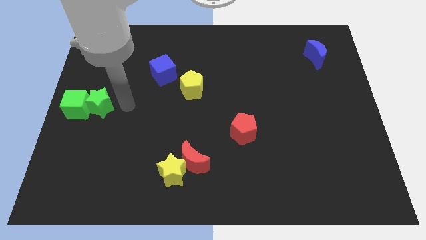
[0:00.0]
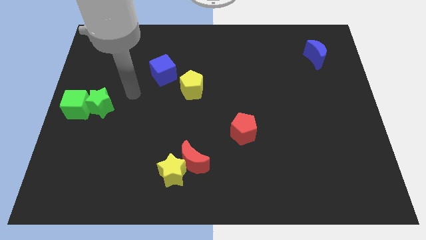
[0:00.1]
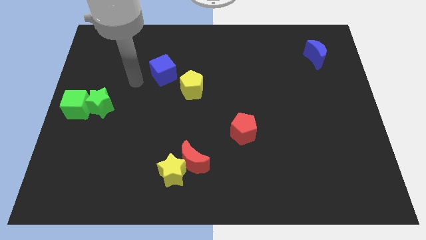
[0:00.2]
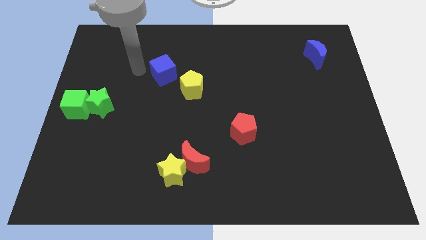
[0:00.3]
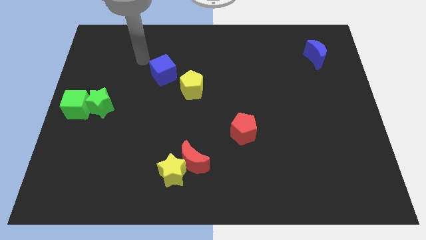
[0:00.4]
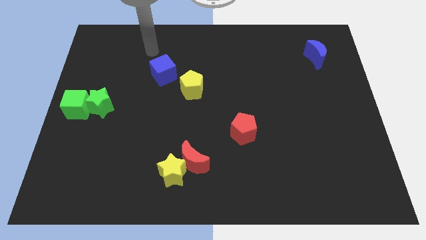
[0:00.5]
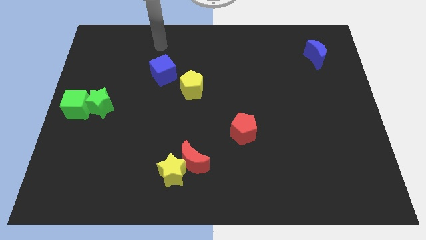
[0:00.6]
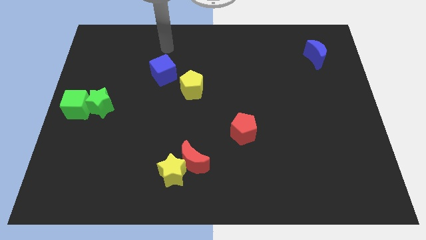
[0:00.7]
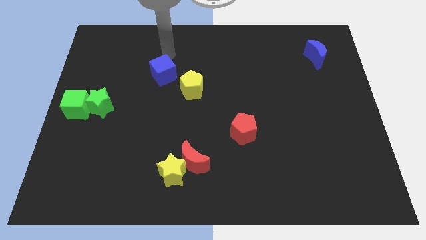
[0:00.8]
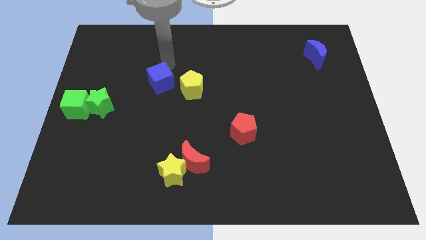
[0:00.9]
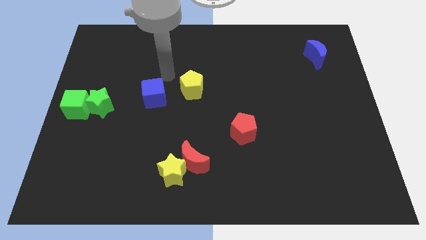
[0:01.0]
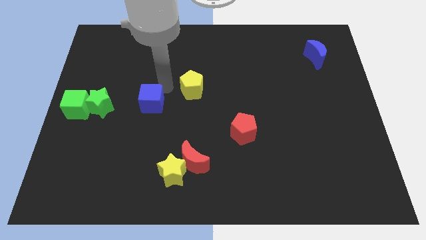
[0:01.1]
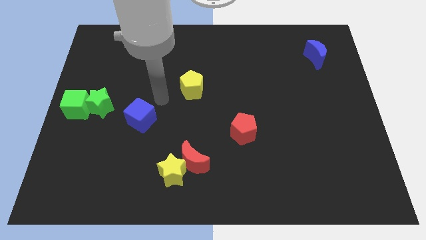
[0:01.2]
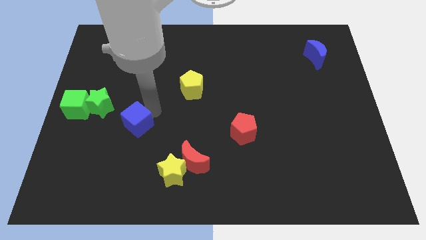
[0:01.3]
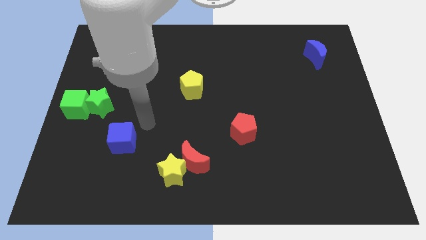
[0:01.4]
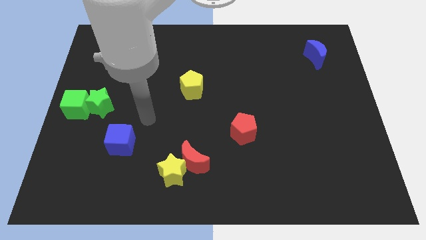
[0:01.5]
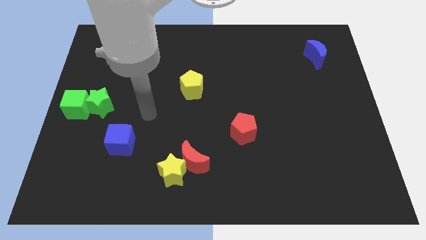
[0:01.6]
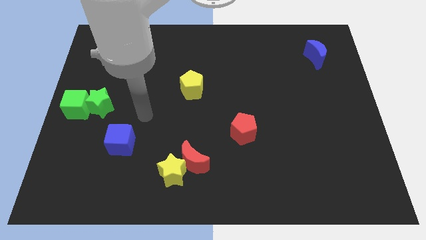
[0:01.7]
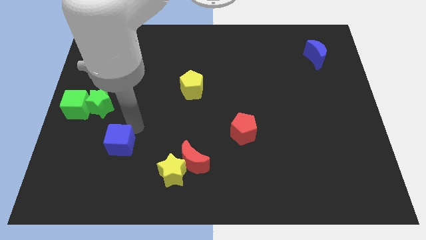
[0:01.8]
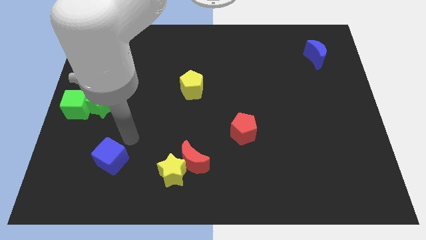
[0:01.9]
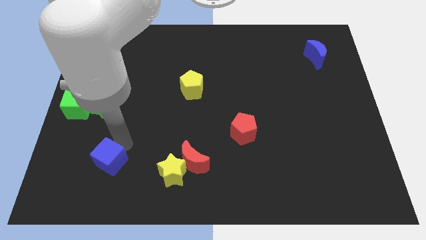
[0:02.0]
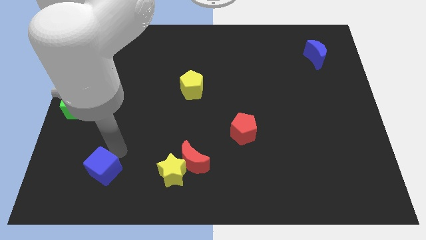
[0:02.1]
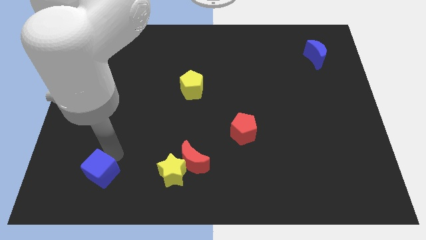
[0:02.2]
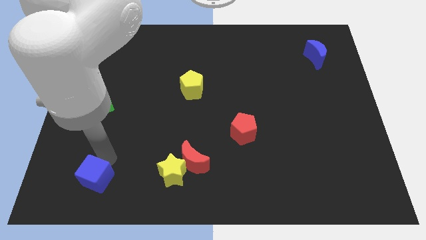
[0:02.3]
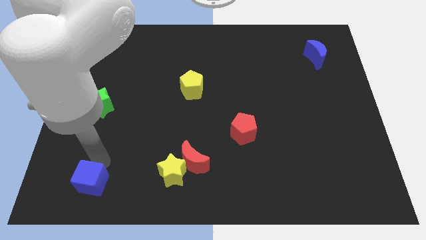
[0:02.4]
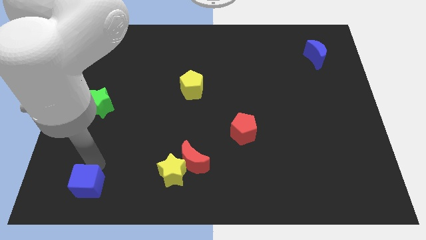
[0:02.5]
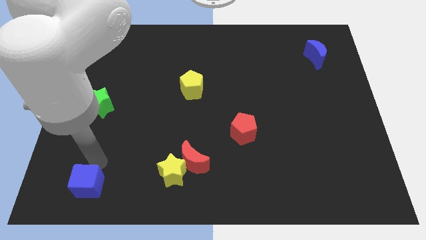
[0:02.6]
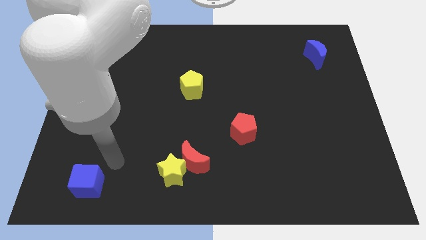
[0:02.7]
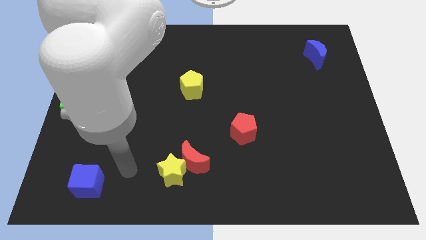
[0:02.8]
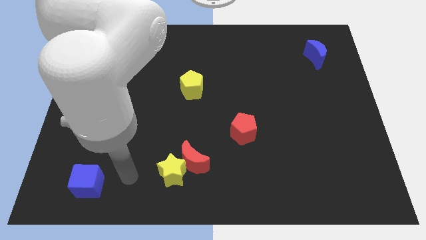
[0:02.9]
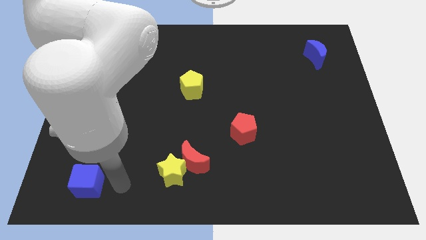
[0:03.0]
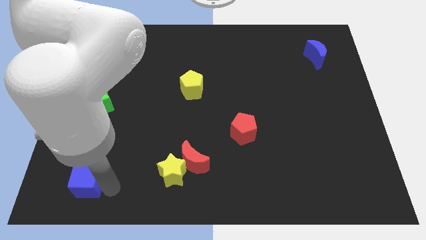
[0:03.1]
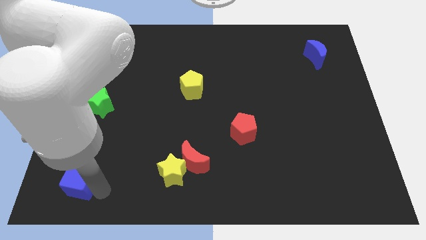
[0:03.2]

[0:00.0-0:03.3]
place the blue cube towards bottom left of the board

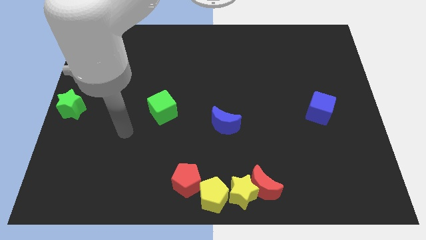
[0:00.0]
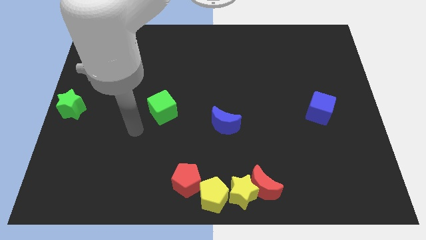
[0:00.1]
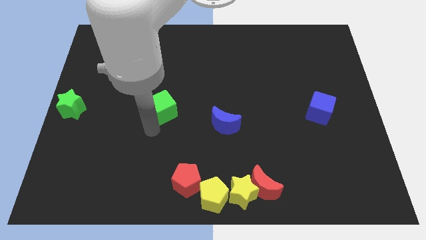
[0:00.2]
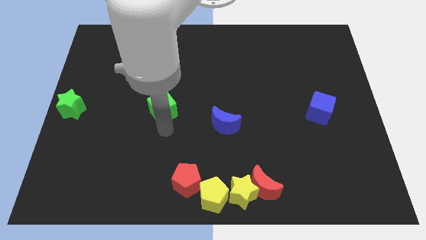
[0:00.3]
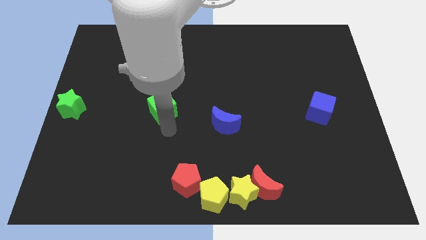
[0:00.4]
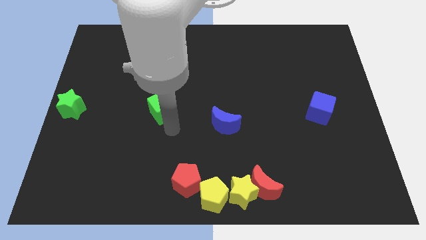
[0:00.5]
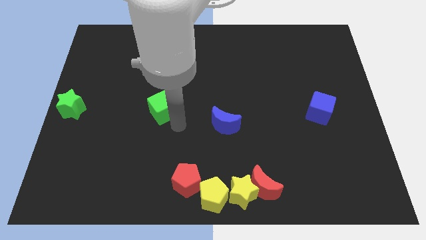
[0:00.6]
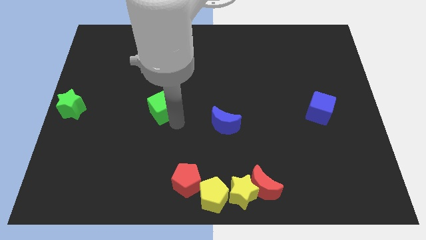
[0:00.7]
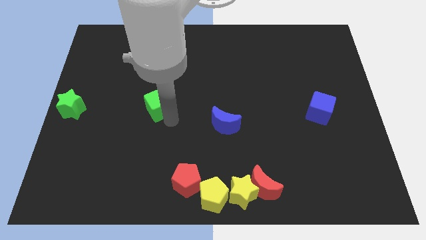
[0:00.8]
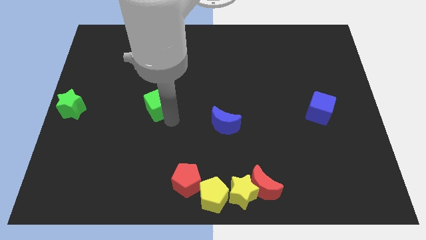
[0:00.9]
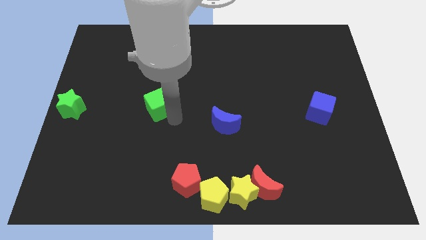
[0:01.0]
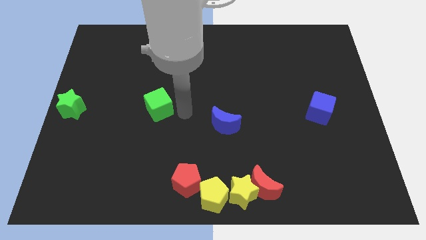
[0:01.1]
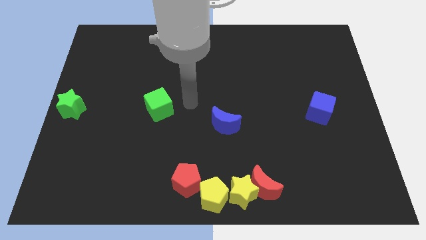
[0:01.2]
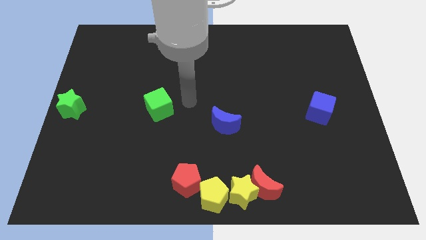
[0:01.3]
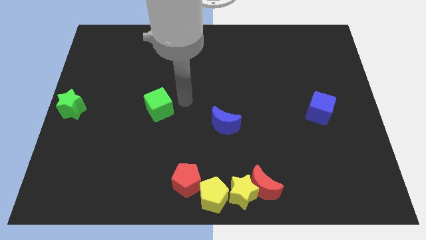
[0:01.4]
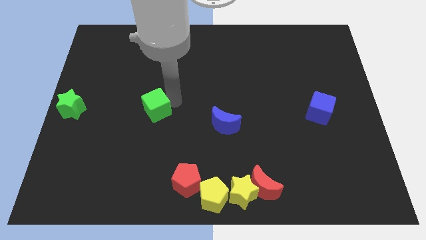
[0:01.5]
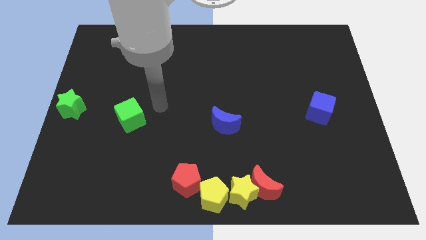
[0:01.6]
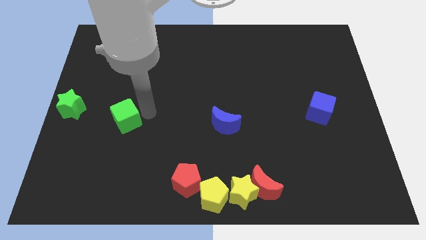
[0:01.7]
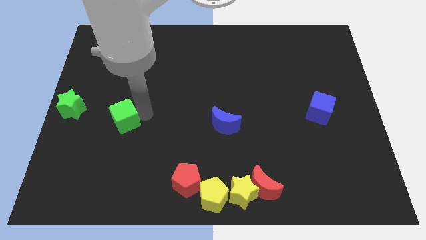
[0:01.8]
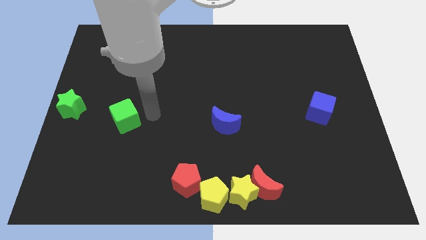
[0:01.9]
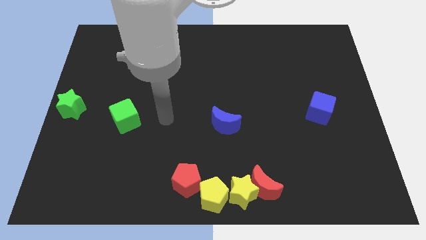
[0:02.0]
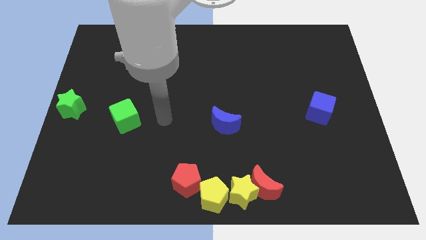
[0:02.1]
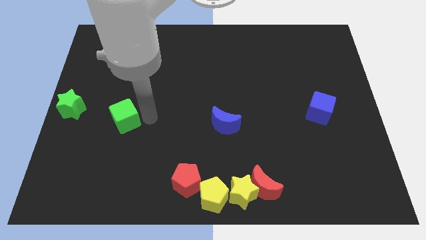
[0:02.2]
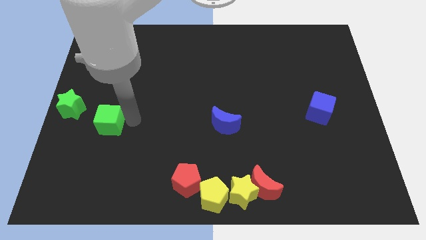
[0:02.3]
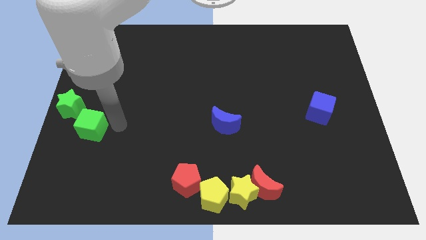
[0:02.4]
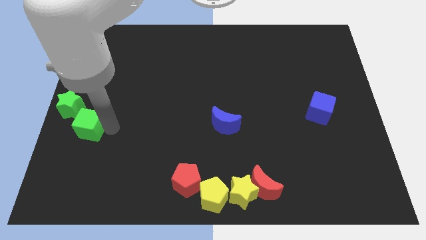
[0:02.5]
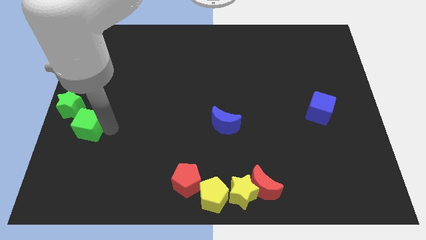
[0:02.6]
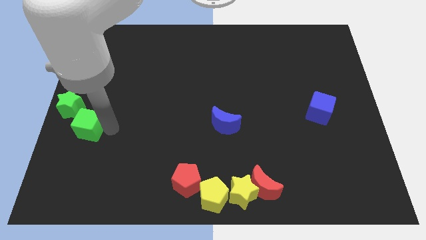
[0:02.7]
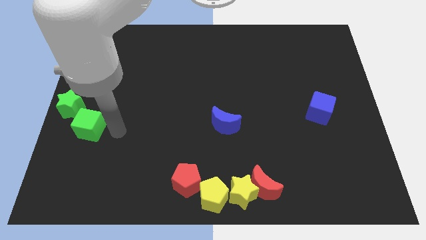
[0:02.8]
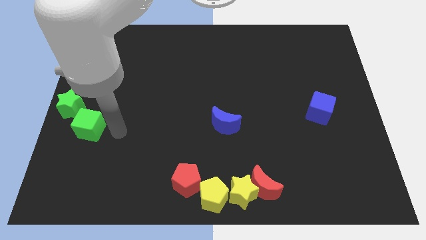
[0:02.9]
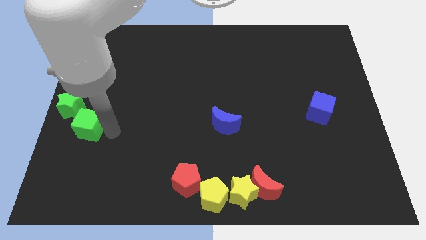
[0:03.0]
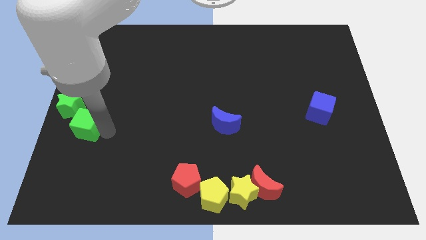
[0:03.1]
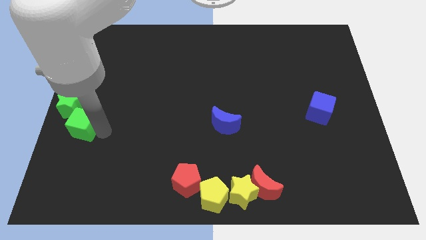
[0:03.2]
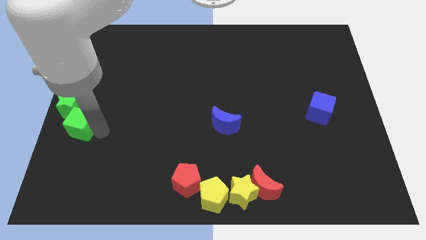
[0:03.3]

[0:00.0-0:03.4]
push the green cube close to the green star

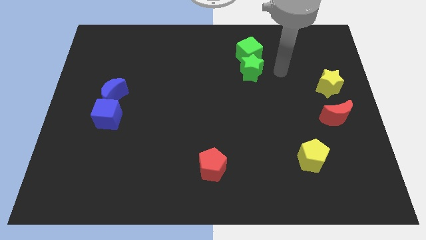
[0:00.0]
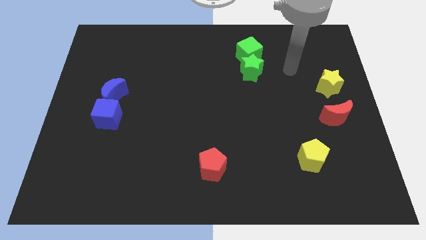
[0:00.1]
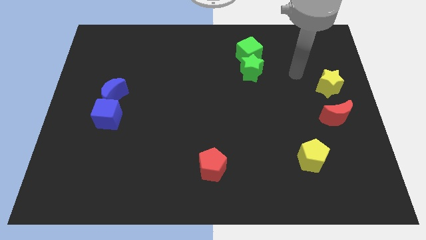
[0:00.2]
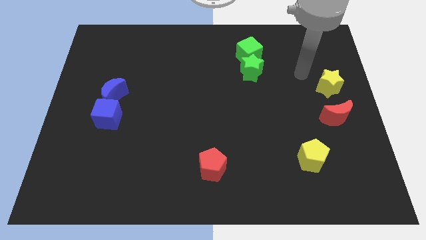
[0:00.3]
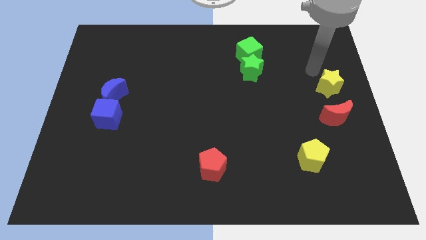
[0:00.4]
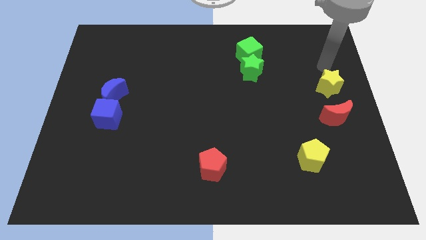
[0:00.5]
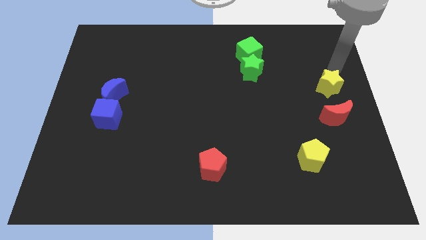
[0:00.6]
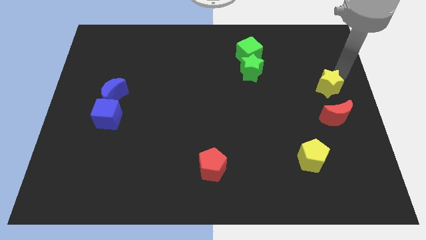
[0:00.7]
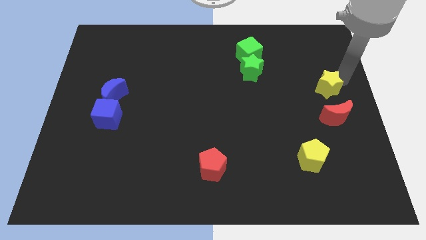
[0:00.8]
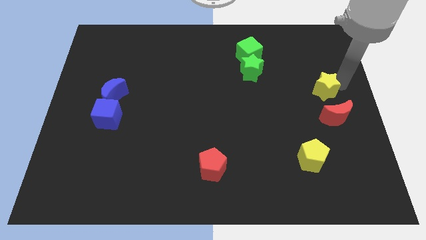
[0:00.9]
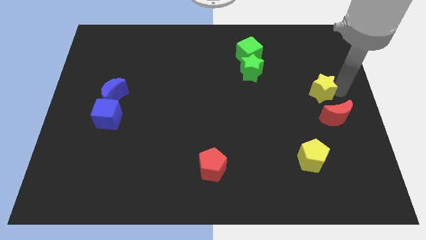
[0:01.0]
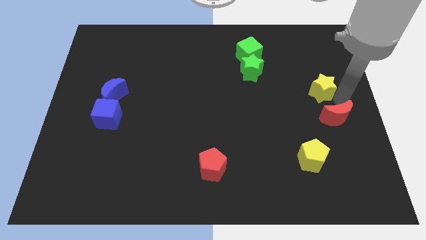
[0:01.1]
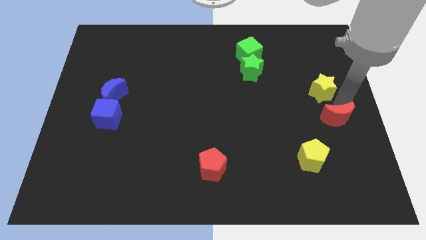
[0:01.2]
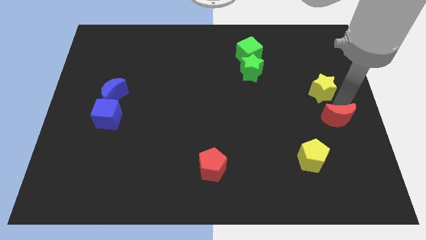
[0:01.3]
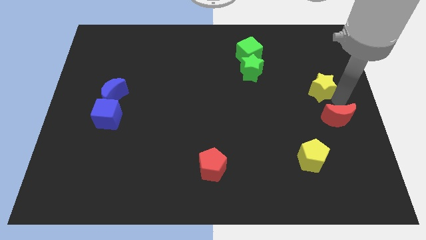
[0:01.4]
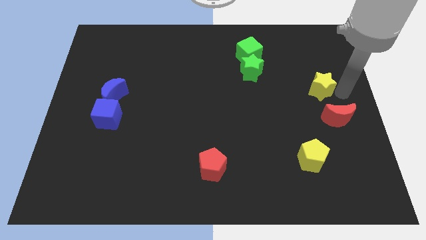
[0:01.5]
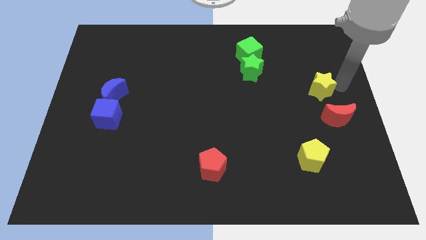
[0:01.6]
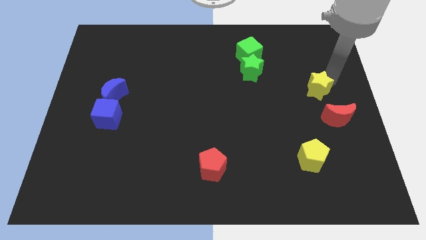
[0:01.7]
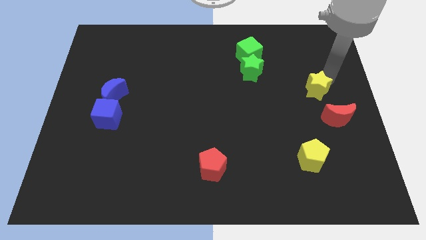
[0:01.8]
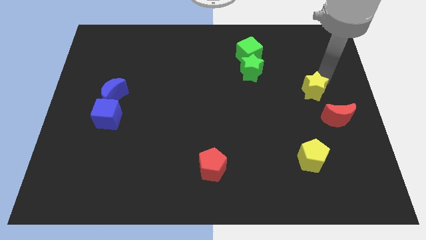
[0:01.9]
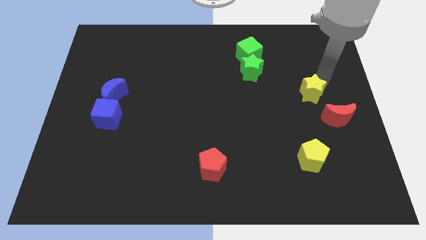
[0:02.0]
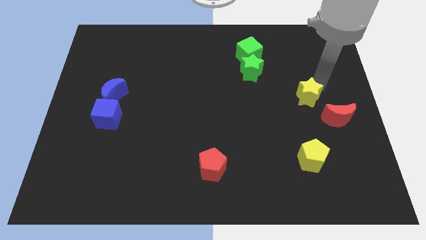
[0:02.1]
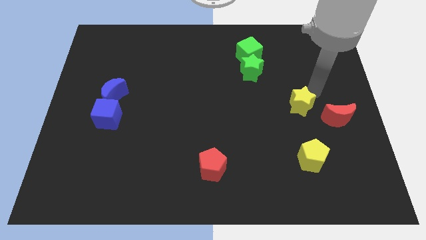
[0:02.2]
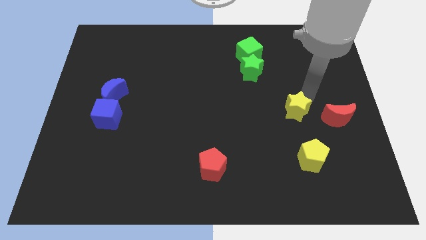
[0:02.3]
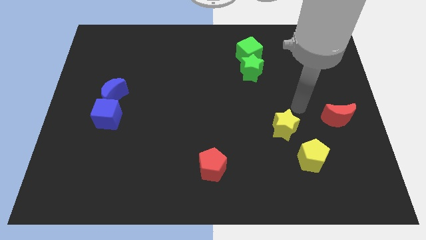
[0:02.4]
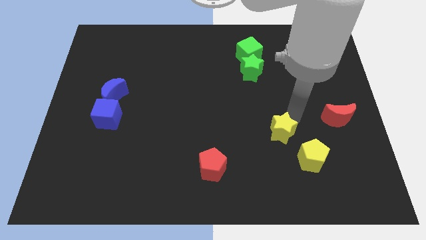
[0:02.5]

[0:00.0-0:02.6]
push the yellow star to the top left of the yellow pentagon
